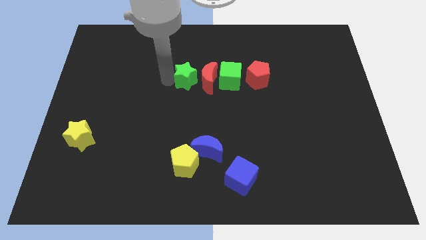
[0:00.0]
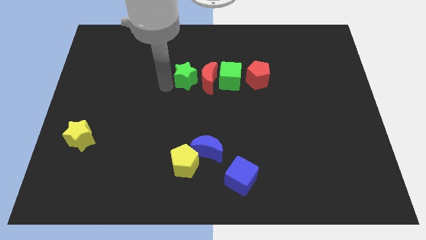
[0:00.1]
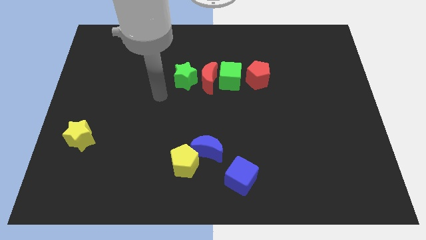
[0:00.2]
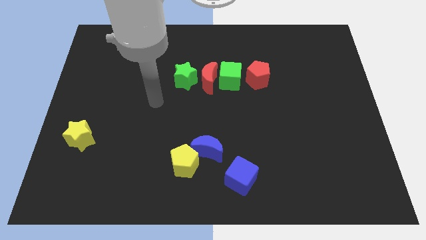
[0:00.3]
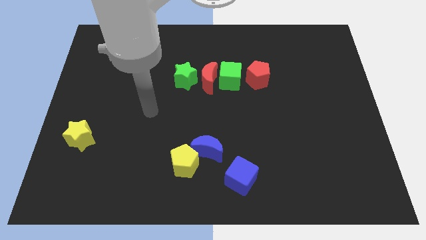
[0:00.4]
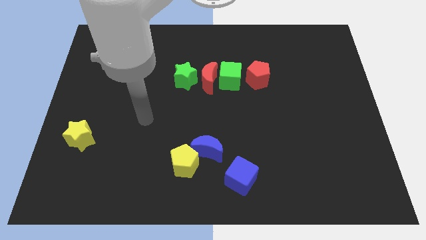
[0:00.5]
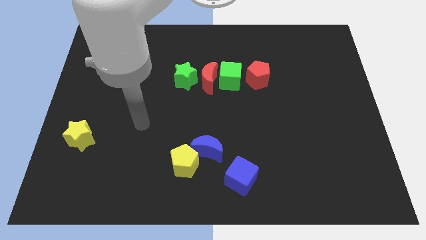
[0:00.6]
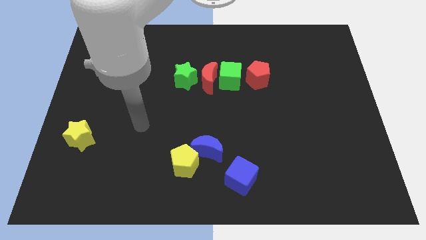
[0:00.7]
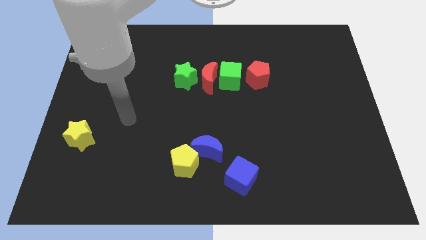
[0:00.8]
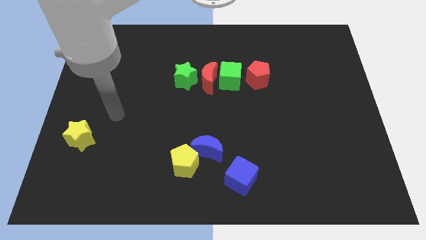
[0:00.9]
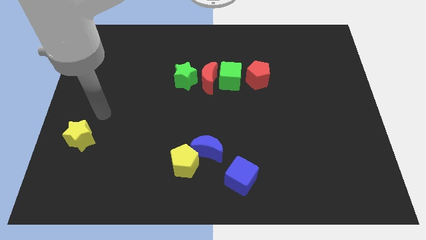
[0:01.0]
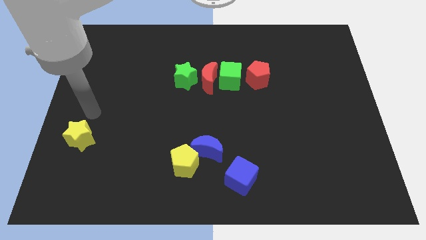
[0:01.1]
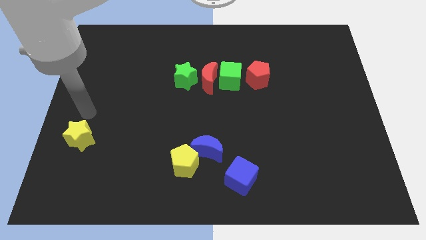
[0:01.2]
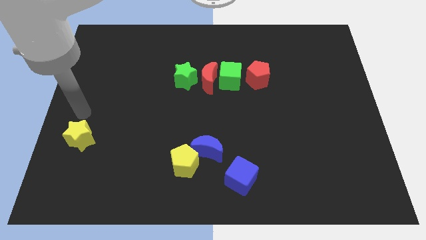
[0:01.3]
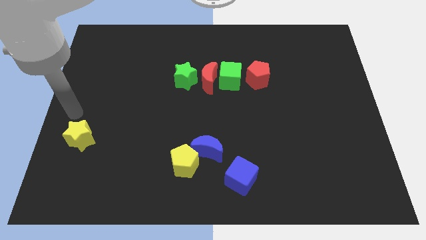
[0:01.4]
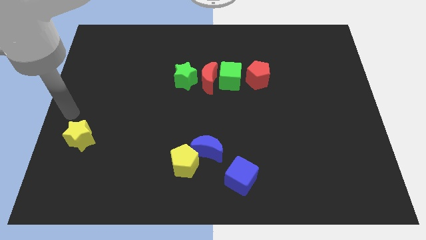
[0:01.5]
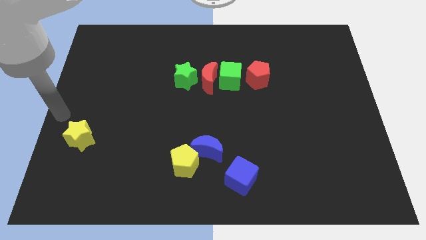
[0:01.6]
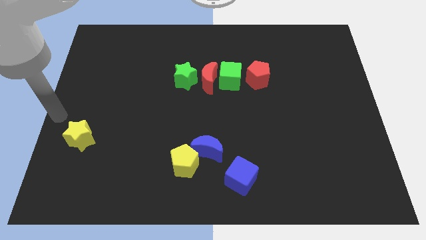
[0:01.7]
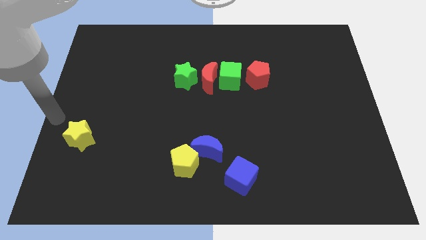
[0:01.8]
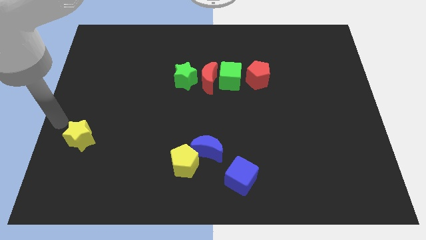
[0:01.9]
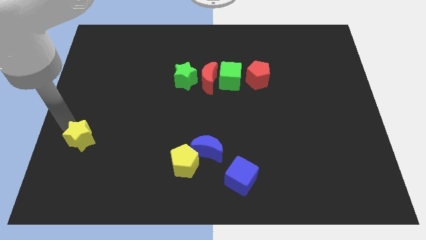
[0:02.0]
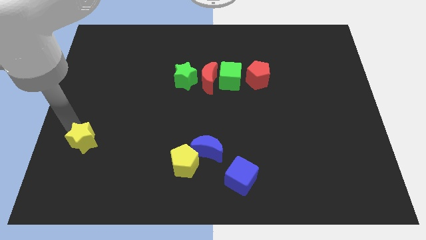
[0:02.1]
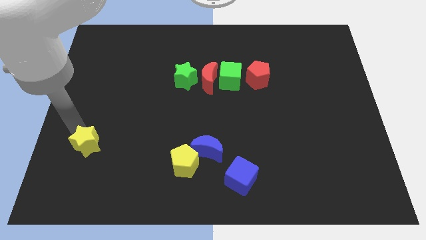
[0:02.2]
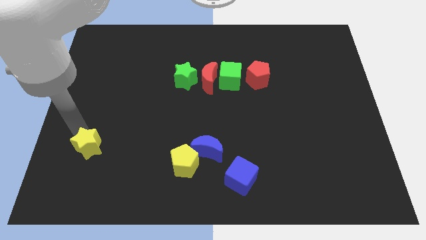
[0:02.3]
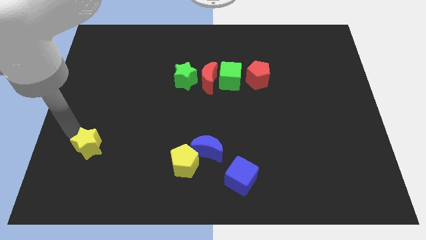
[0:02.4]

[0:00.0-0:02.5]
move the arm away from the green star

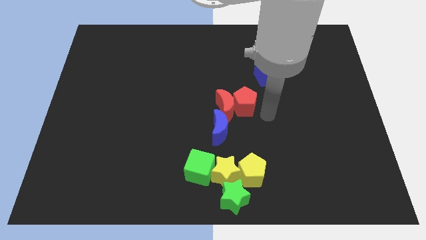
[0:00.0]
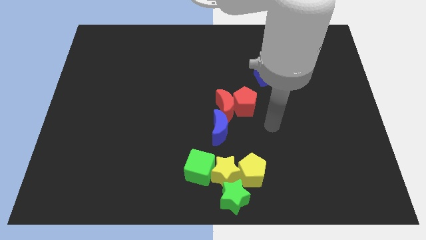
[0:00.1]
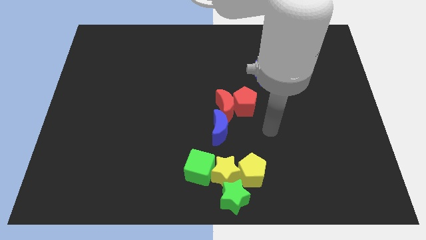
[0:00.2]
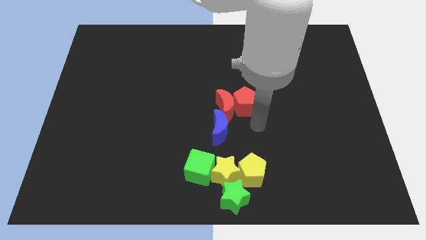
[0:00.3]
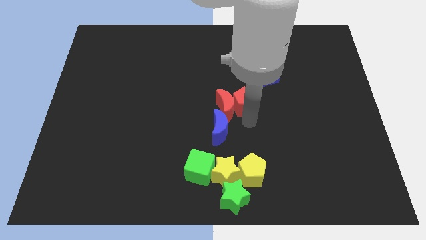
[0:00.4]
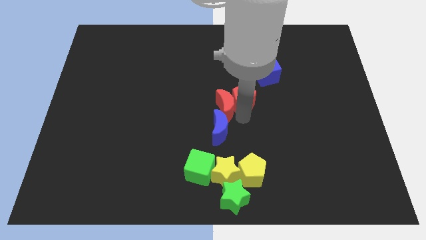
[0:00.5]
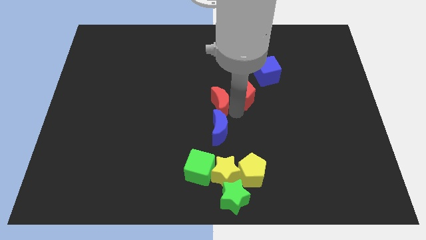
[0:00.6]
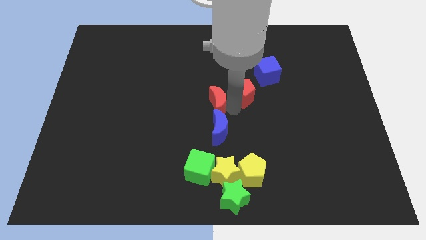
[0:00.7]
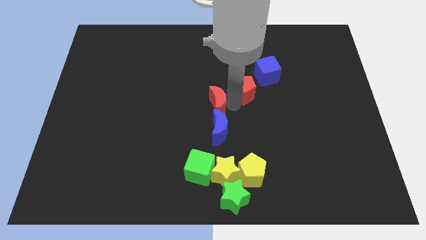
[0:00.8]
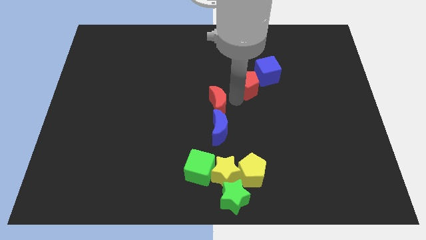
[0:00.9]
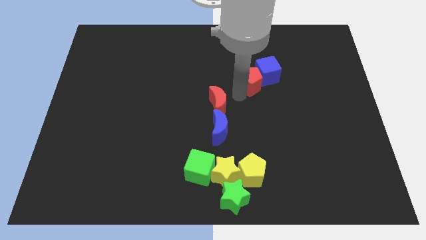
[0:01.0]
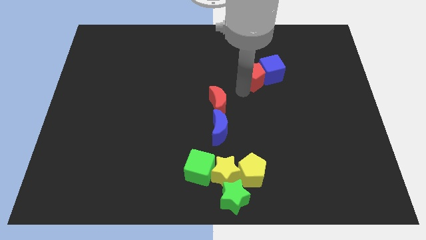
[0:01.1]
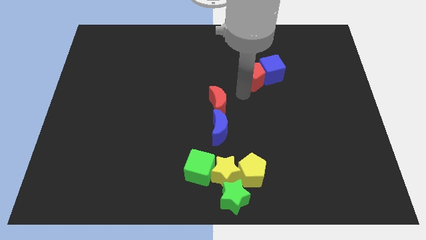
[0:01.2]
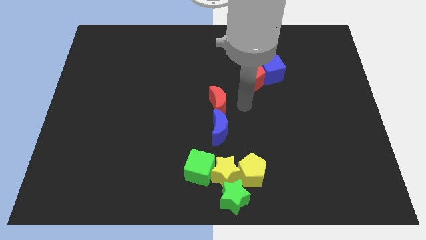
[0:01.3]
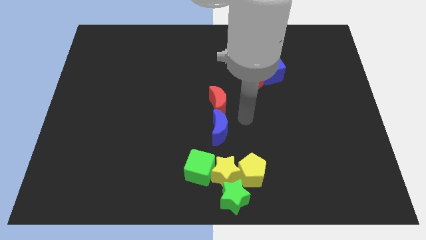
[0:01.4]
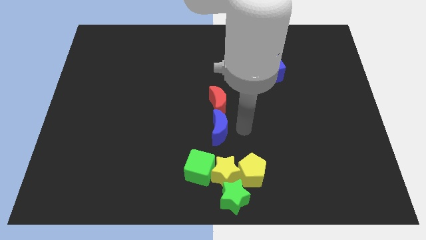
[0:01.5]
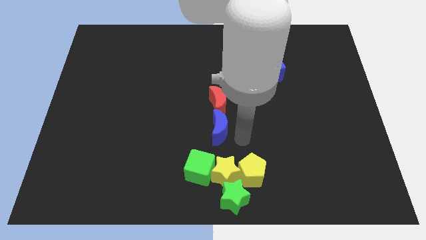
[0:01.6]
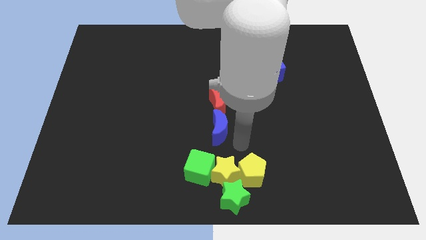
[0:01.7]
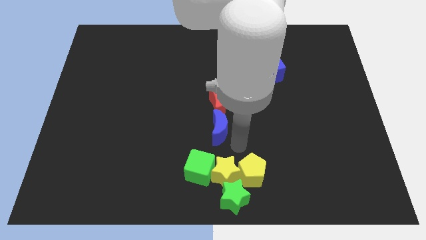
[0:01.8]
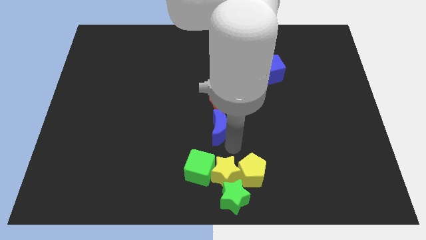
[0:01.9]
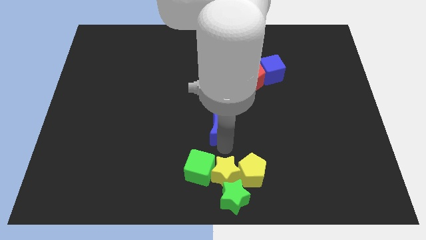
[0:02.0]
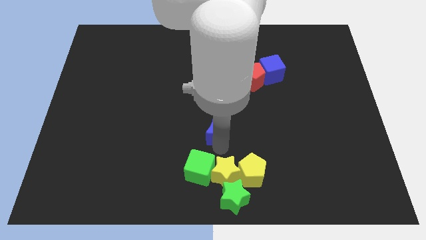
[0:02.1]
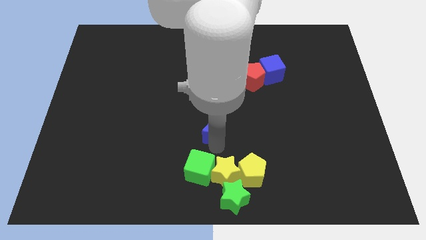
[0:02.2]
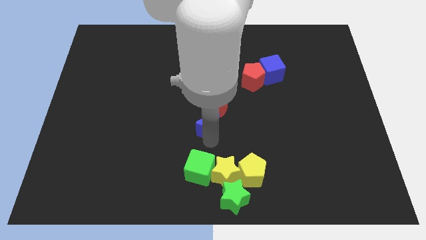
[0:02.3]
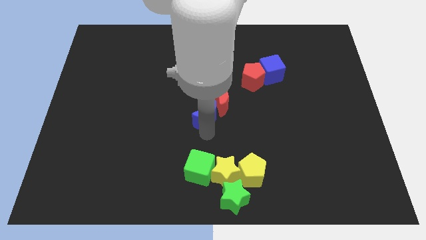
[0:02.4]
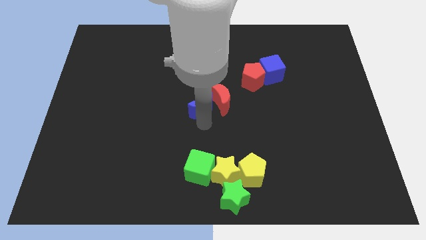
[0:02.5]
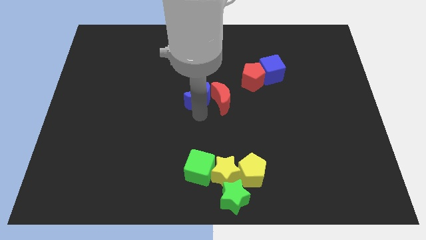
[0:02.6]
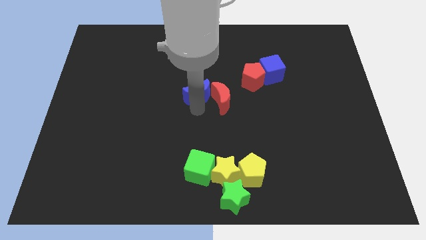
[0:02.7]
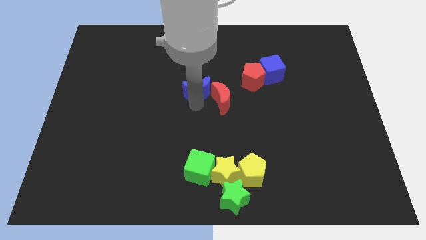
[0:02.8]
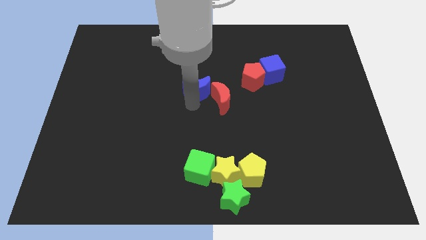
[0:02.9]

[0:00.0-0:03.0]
separate red pentagon from red moon

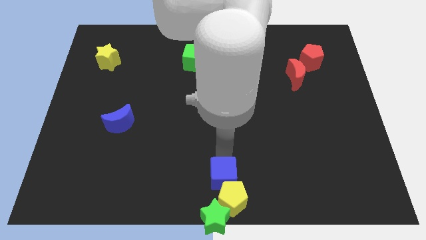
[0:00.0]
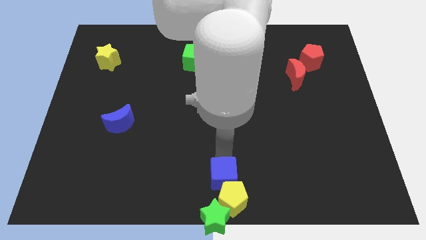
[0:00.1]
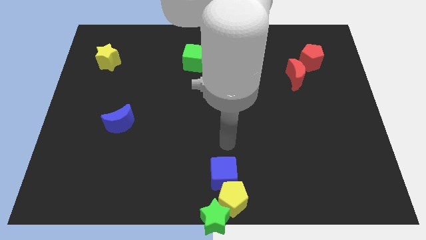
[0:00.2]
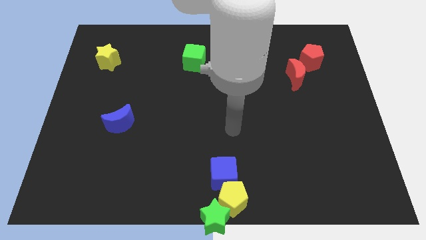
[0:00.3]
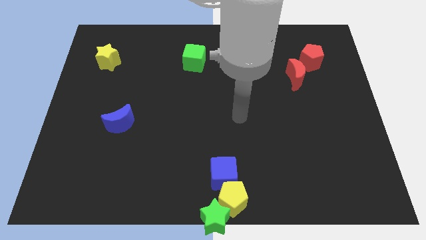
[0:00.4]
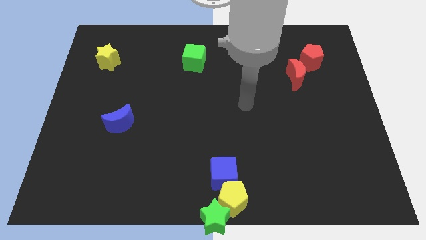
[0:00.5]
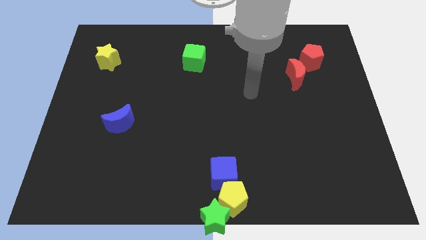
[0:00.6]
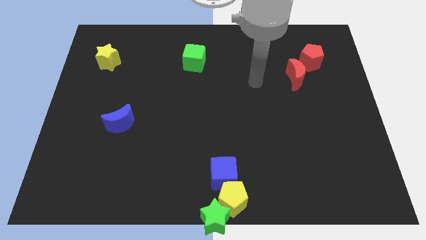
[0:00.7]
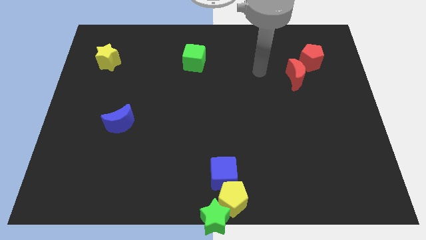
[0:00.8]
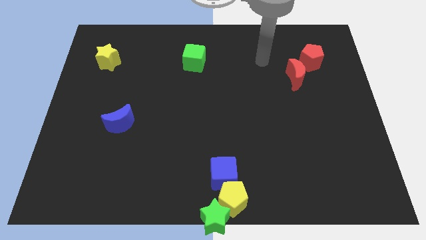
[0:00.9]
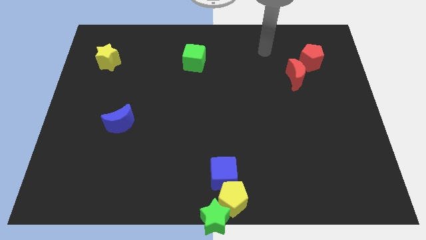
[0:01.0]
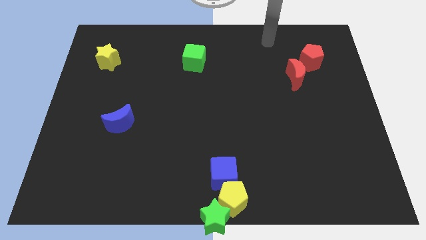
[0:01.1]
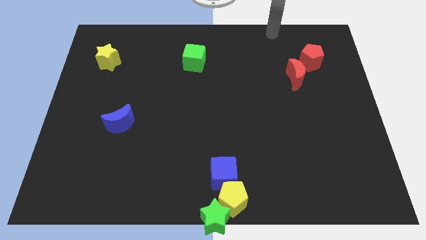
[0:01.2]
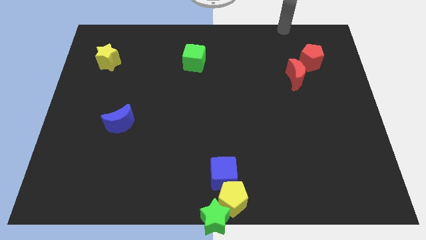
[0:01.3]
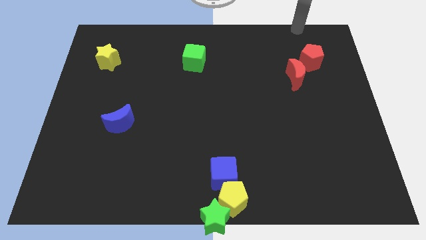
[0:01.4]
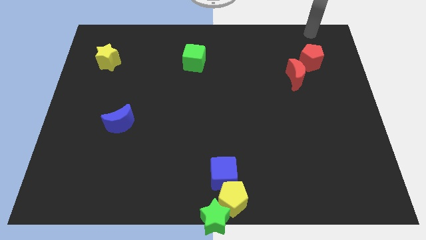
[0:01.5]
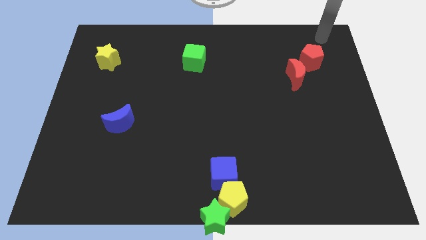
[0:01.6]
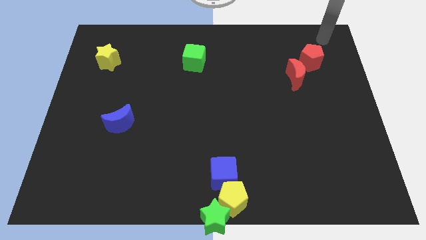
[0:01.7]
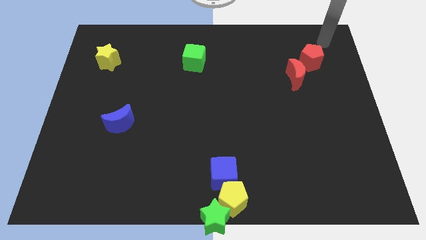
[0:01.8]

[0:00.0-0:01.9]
move the arm towards the red pentagon

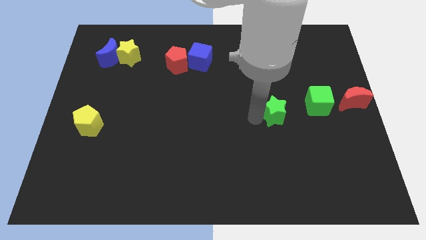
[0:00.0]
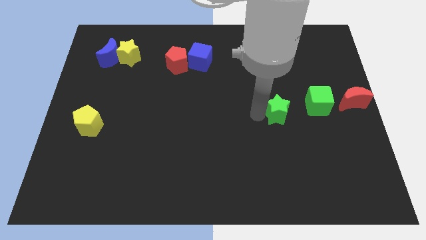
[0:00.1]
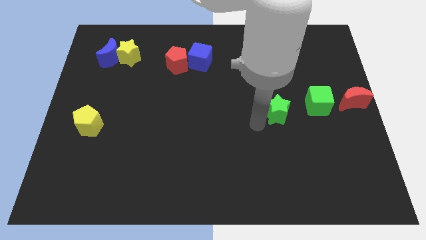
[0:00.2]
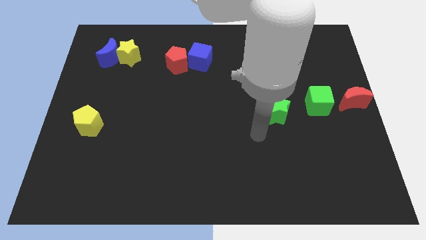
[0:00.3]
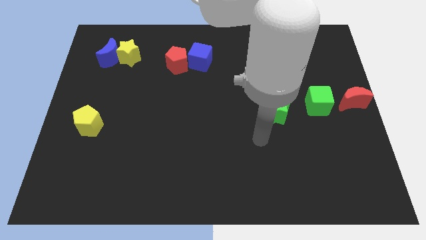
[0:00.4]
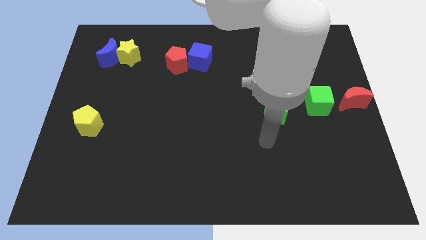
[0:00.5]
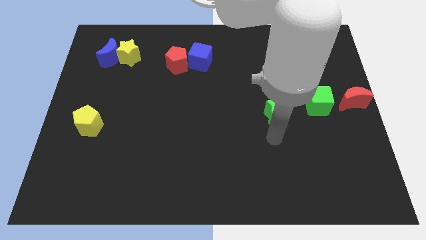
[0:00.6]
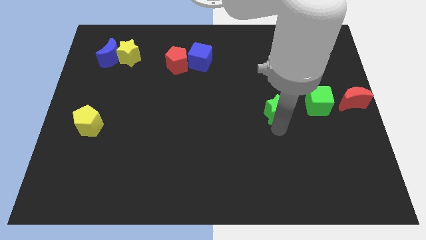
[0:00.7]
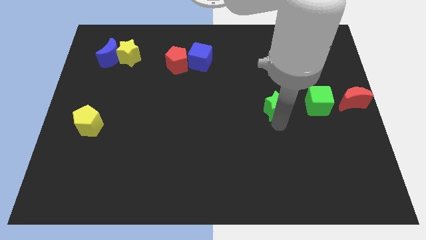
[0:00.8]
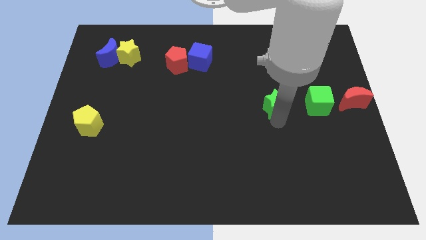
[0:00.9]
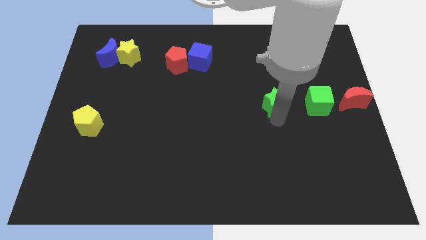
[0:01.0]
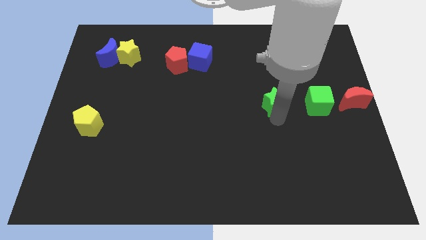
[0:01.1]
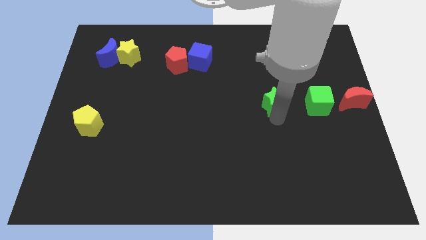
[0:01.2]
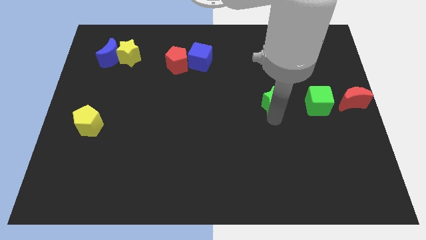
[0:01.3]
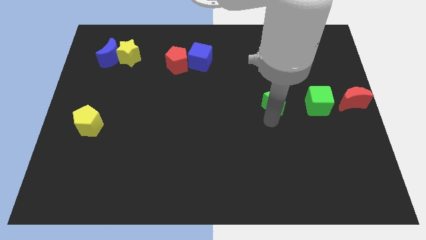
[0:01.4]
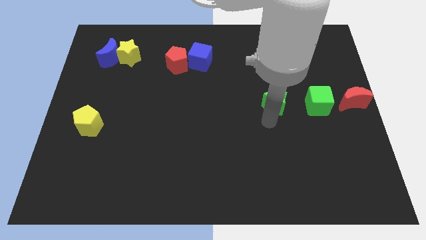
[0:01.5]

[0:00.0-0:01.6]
move the green star towards the green cube

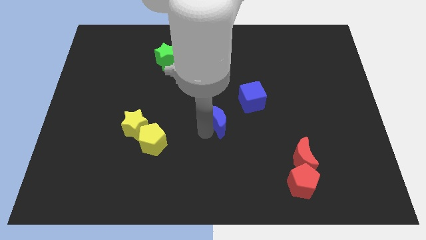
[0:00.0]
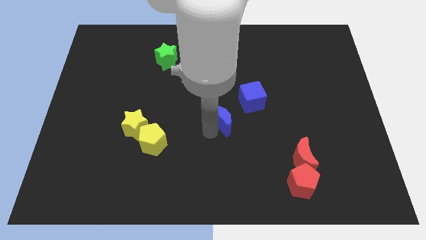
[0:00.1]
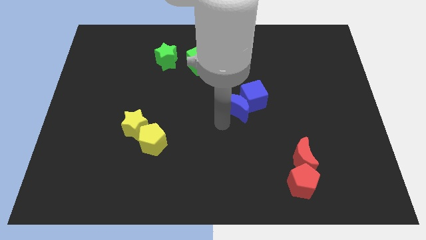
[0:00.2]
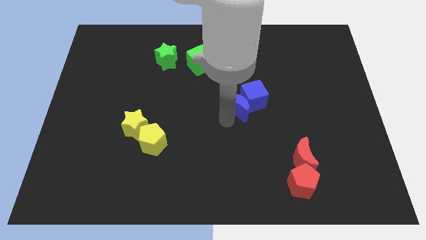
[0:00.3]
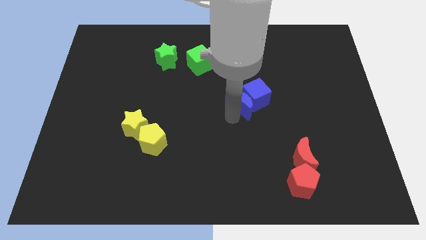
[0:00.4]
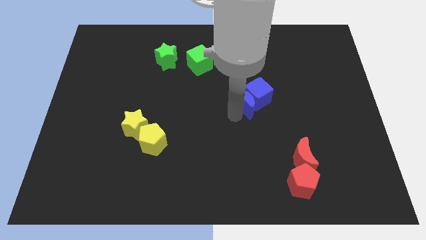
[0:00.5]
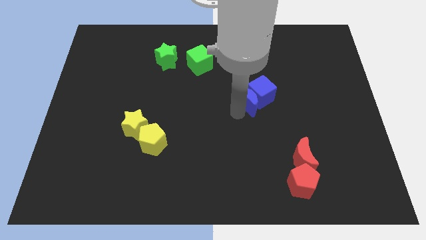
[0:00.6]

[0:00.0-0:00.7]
push the blue crescent into the blue cube
